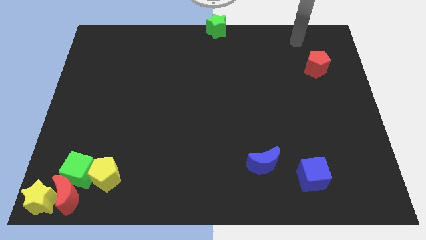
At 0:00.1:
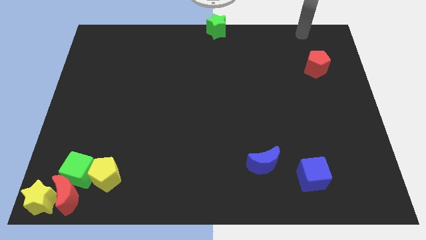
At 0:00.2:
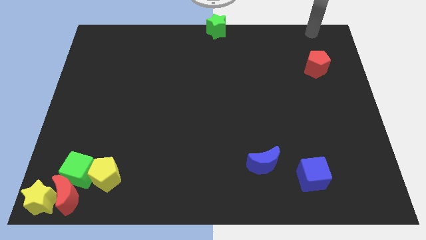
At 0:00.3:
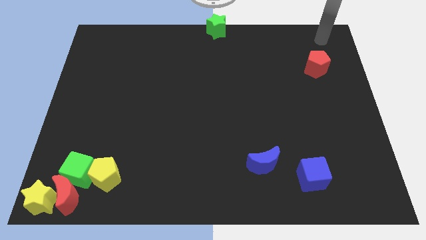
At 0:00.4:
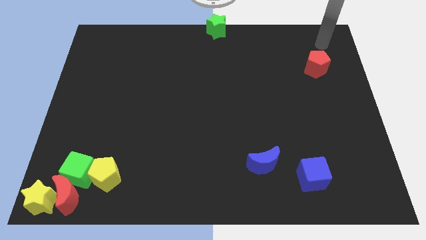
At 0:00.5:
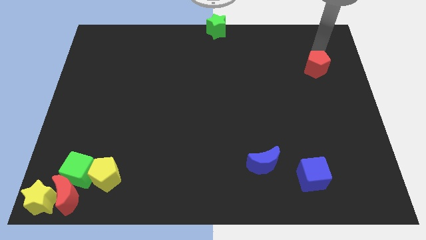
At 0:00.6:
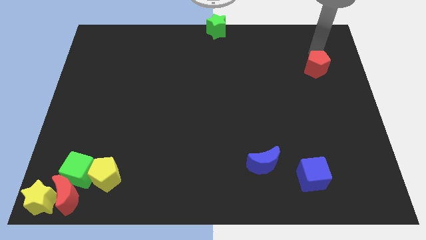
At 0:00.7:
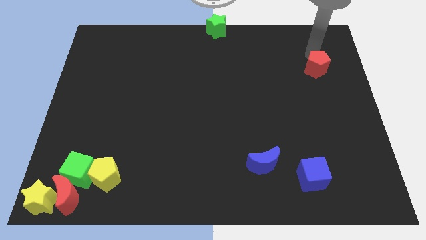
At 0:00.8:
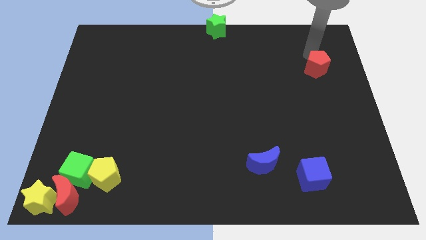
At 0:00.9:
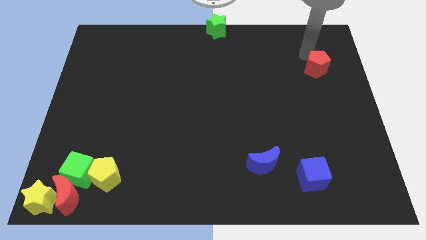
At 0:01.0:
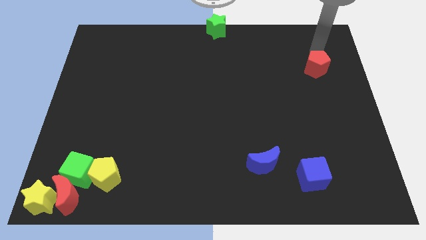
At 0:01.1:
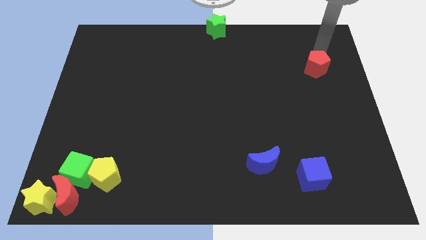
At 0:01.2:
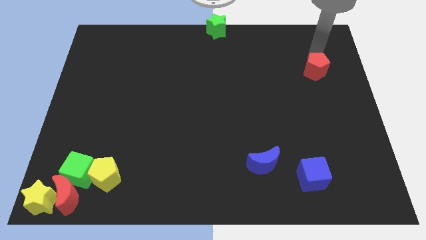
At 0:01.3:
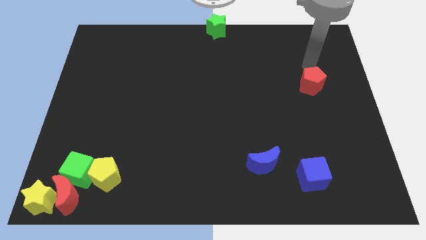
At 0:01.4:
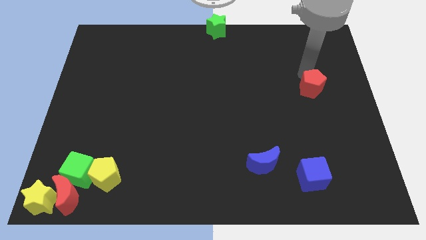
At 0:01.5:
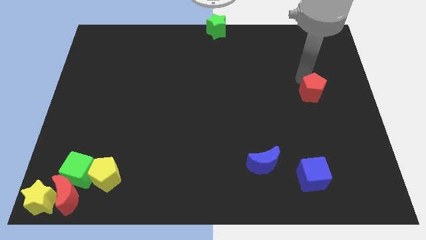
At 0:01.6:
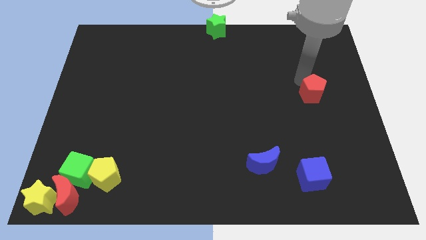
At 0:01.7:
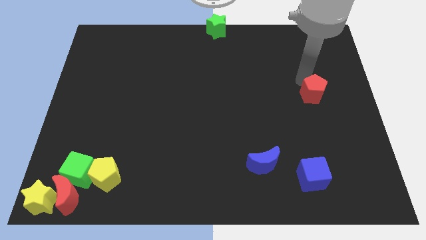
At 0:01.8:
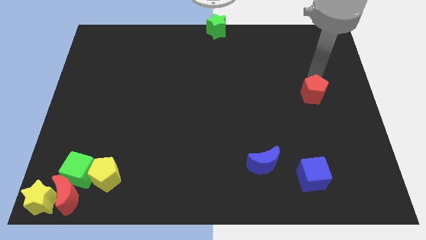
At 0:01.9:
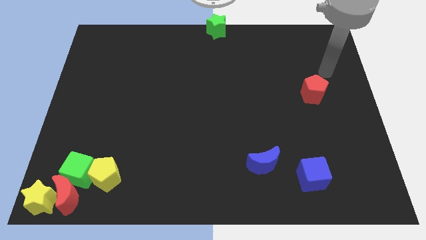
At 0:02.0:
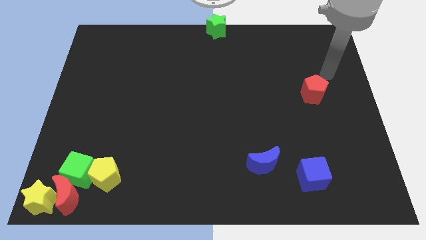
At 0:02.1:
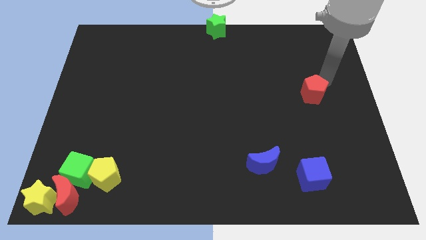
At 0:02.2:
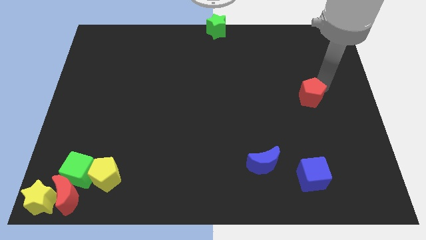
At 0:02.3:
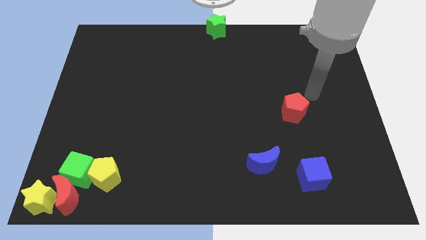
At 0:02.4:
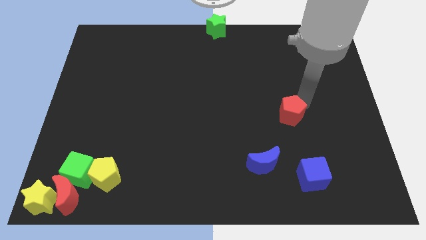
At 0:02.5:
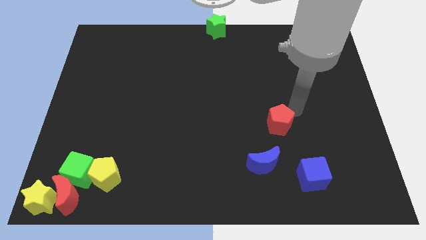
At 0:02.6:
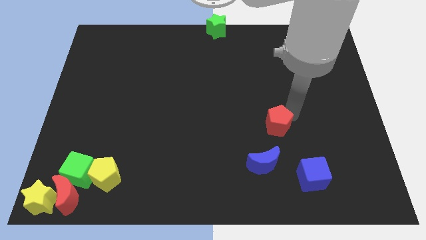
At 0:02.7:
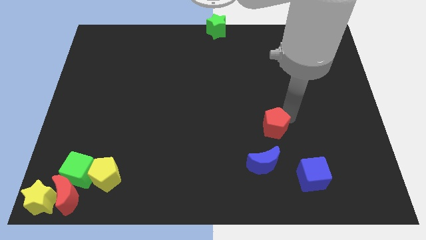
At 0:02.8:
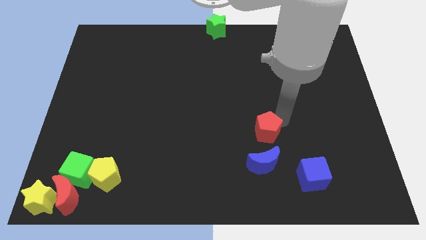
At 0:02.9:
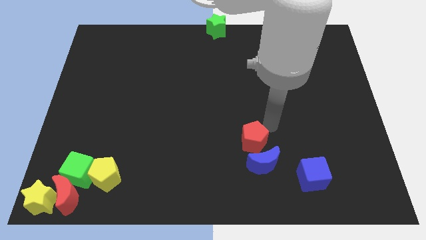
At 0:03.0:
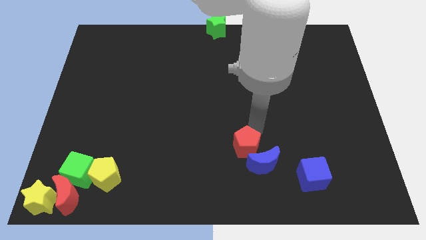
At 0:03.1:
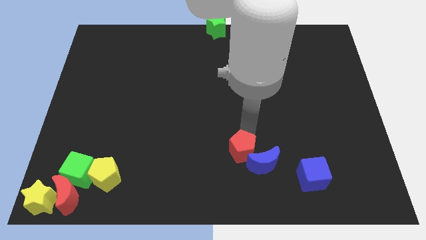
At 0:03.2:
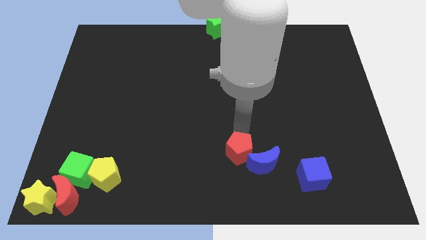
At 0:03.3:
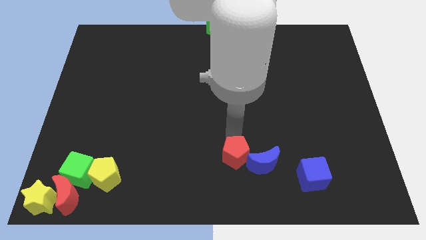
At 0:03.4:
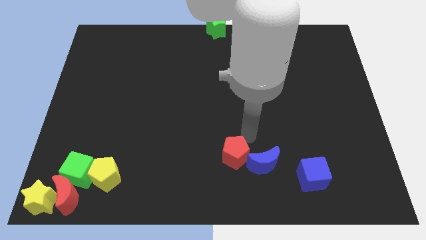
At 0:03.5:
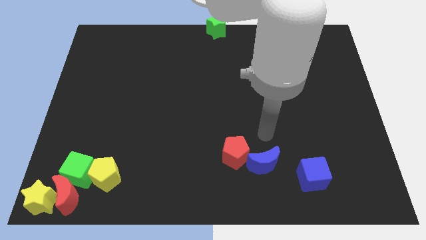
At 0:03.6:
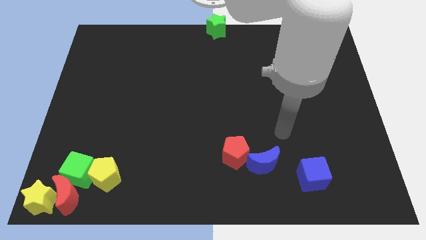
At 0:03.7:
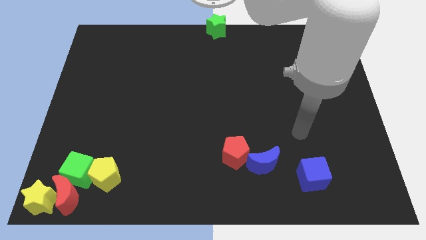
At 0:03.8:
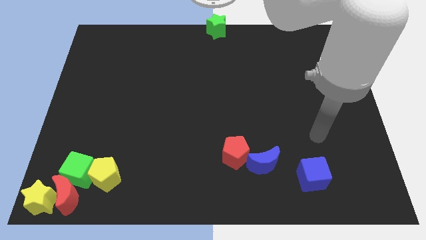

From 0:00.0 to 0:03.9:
move the red pentagon to the left of the blue crescent

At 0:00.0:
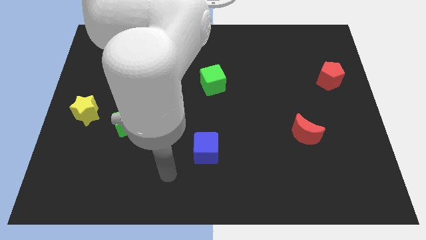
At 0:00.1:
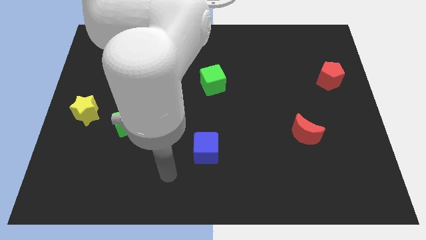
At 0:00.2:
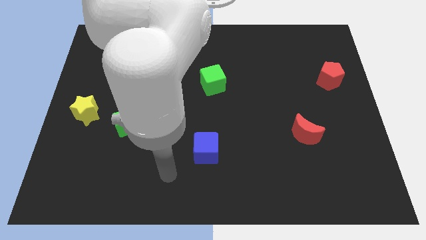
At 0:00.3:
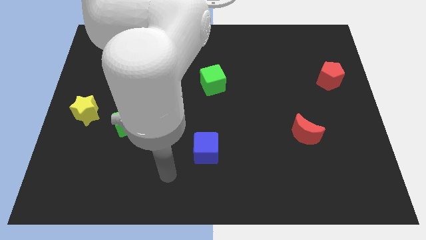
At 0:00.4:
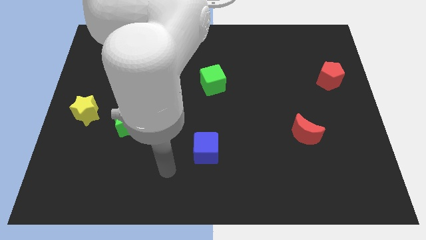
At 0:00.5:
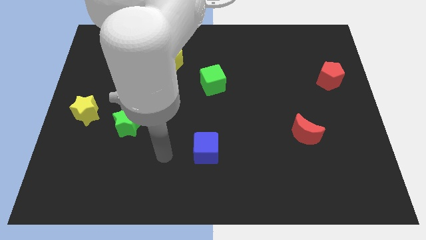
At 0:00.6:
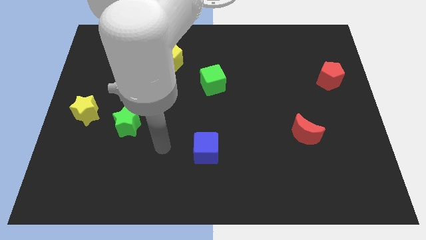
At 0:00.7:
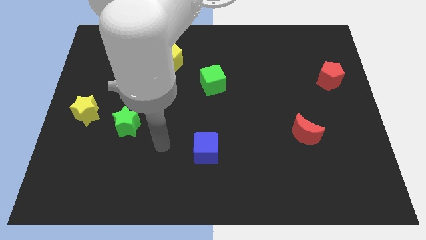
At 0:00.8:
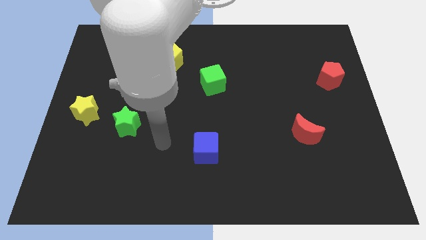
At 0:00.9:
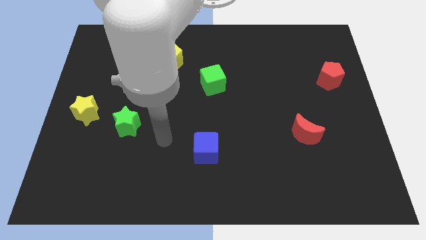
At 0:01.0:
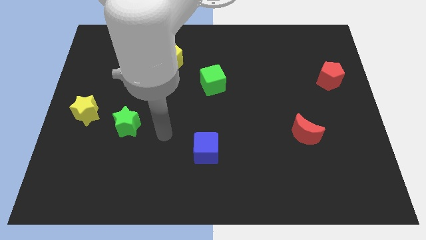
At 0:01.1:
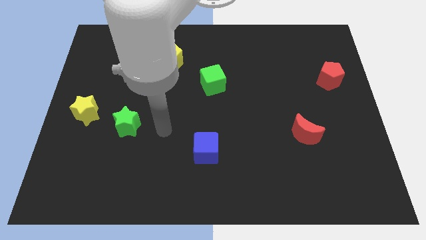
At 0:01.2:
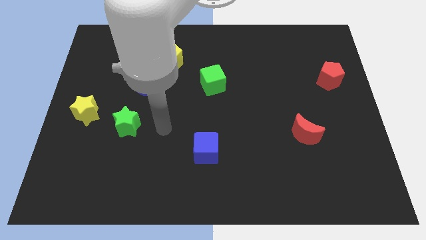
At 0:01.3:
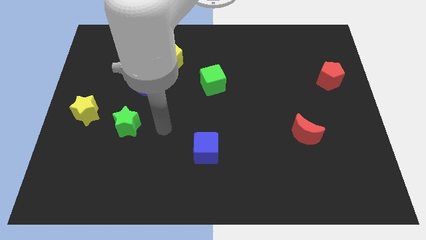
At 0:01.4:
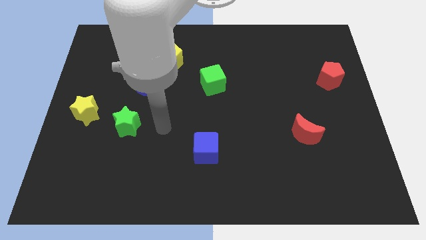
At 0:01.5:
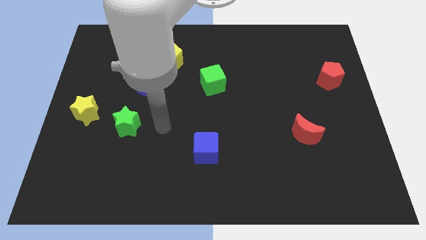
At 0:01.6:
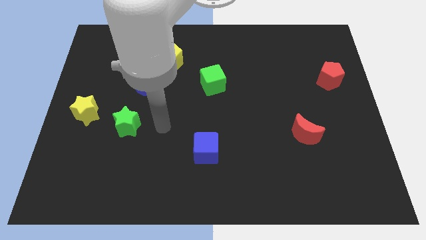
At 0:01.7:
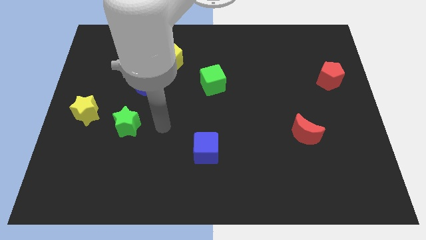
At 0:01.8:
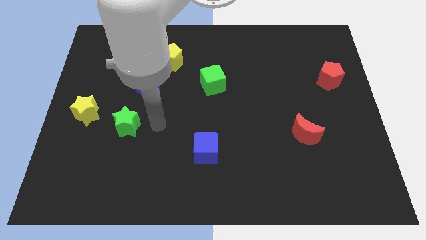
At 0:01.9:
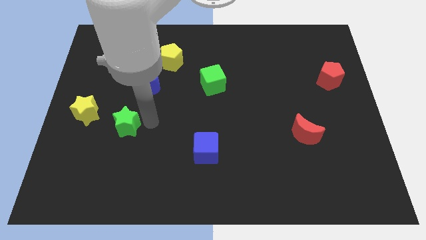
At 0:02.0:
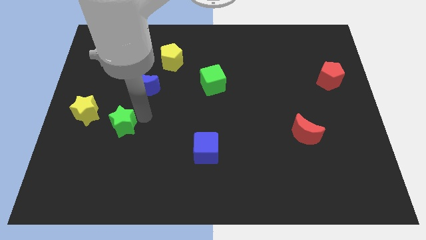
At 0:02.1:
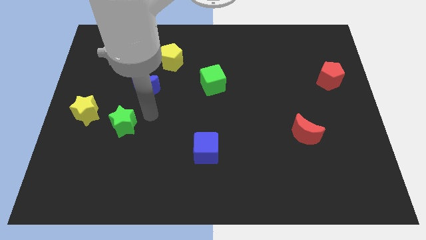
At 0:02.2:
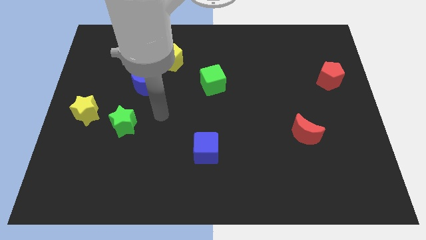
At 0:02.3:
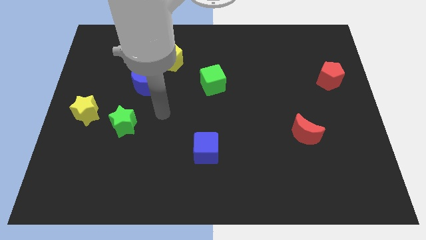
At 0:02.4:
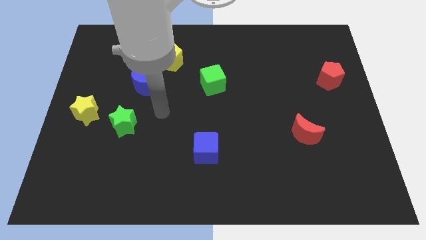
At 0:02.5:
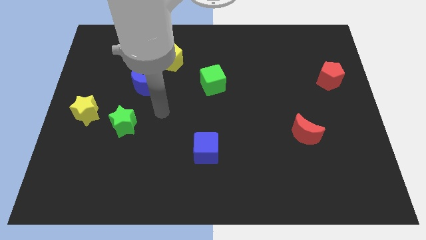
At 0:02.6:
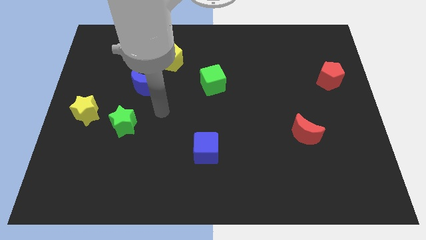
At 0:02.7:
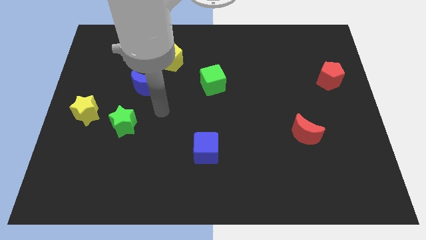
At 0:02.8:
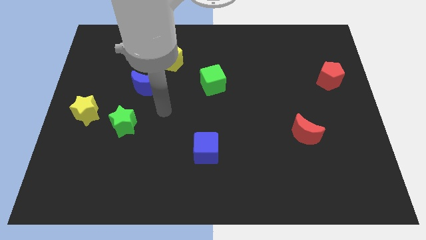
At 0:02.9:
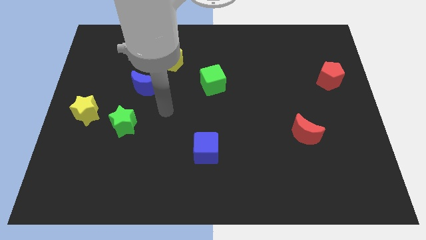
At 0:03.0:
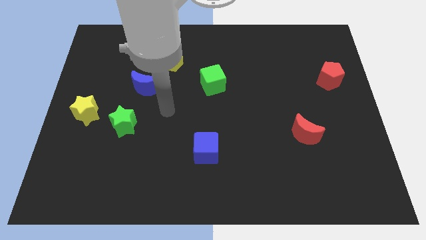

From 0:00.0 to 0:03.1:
slightly tap on the right side of green star

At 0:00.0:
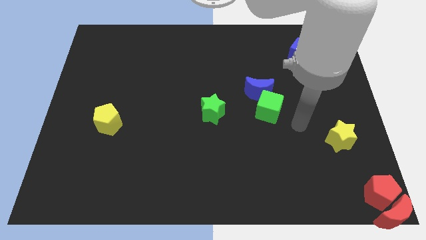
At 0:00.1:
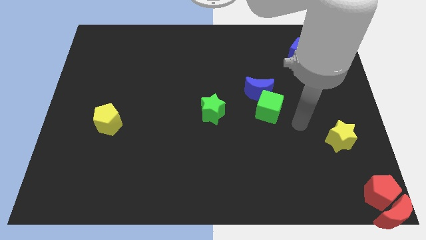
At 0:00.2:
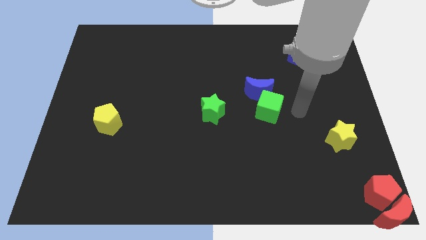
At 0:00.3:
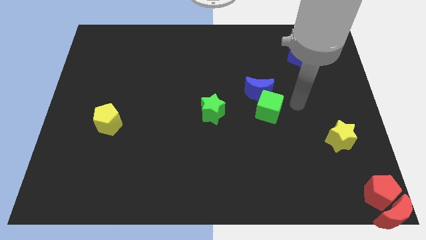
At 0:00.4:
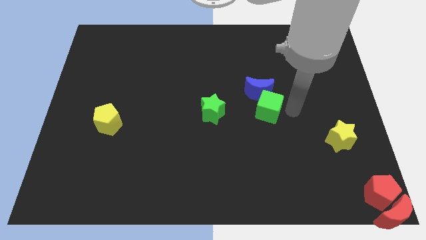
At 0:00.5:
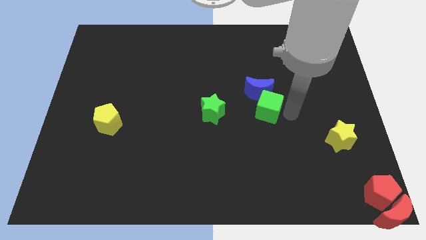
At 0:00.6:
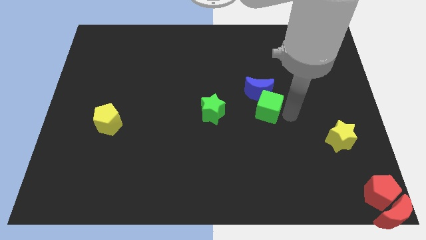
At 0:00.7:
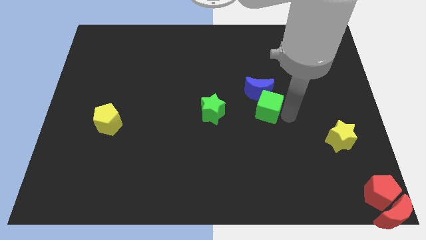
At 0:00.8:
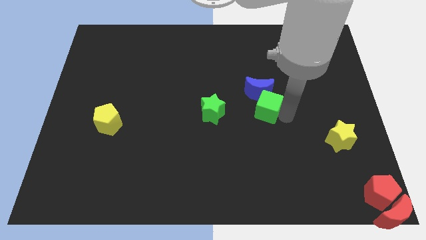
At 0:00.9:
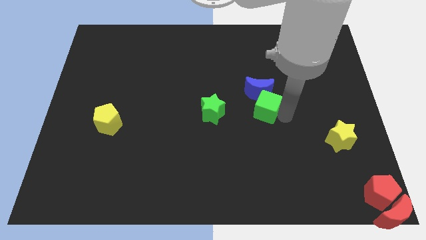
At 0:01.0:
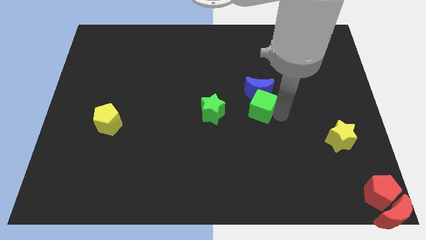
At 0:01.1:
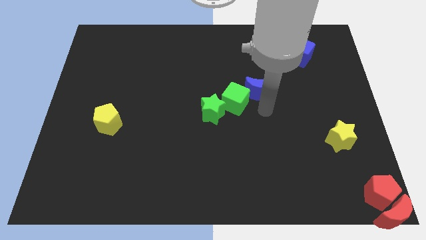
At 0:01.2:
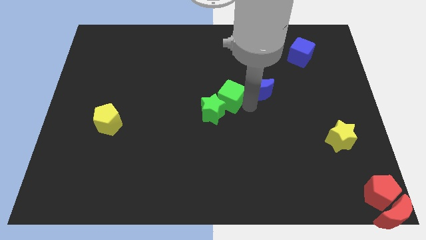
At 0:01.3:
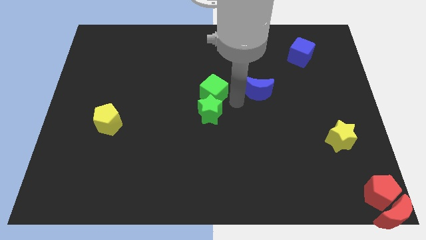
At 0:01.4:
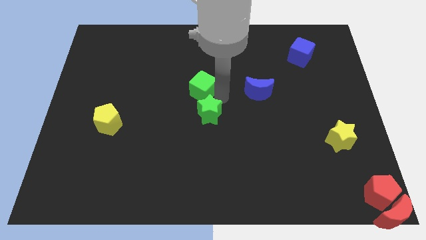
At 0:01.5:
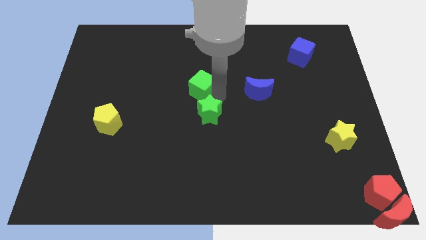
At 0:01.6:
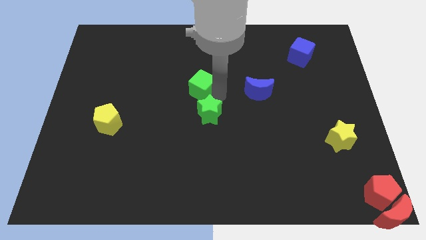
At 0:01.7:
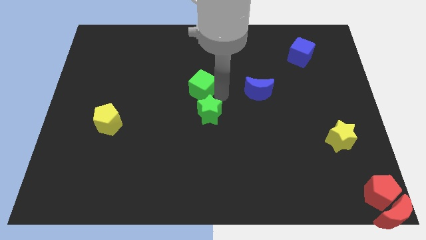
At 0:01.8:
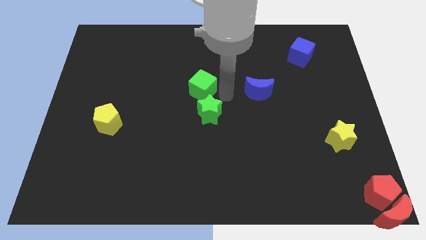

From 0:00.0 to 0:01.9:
place the green cube above the green star
